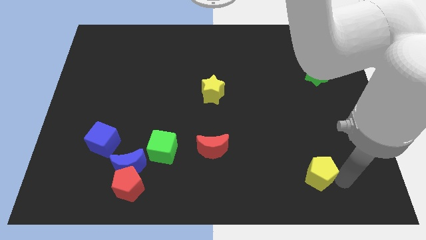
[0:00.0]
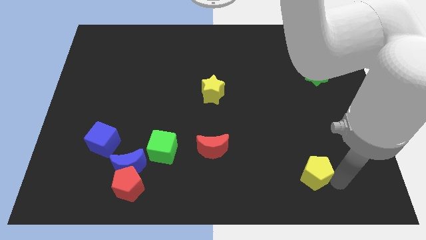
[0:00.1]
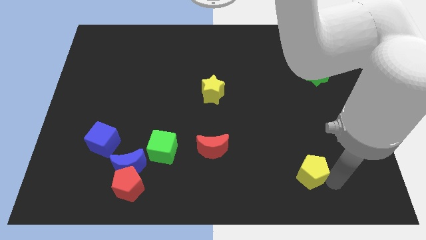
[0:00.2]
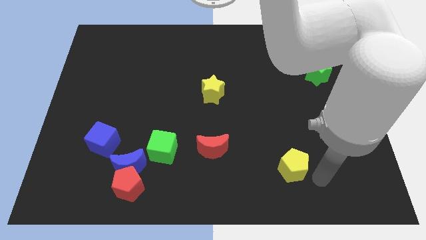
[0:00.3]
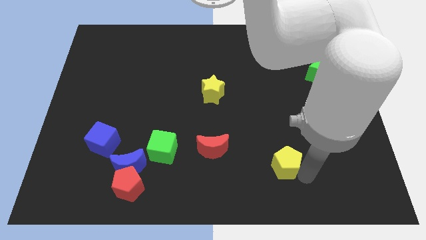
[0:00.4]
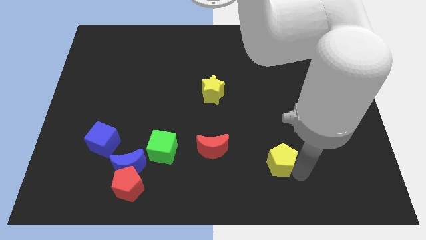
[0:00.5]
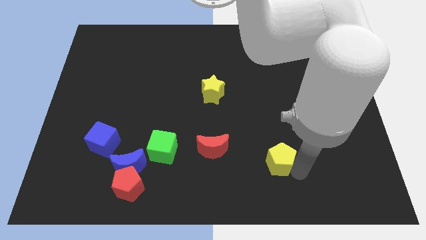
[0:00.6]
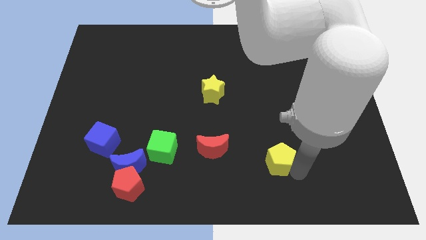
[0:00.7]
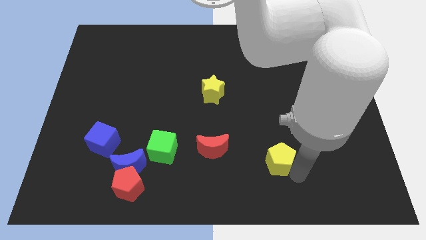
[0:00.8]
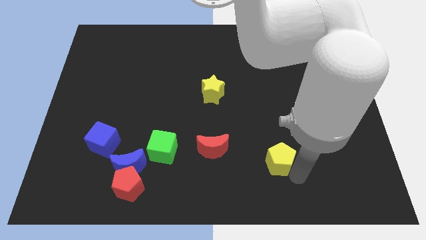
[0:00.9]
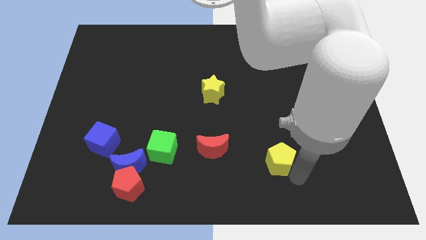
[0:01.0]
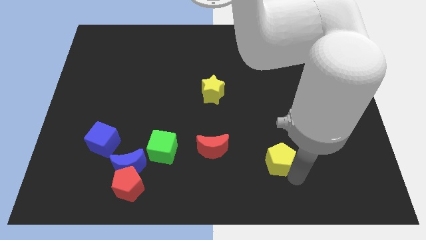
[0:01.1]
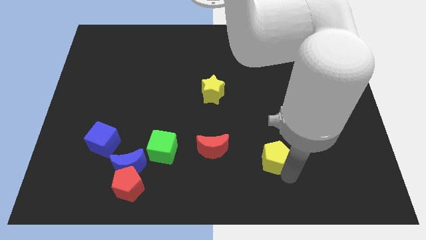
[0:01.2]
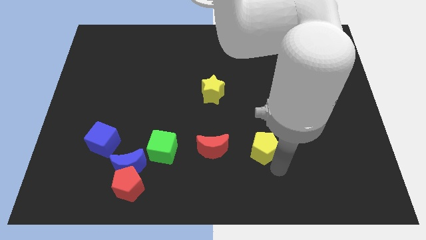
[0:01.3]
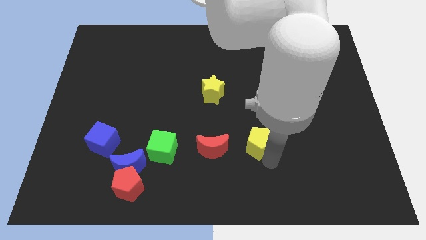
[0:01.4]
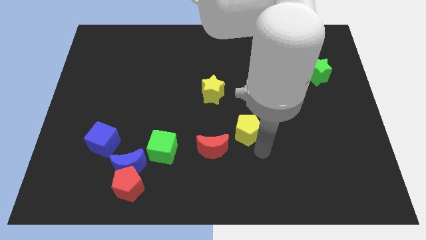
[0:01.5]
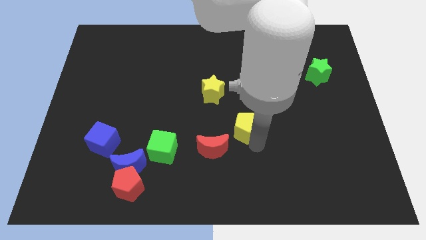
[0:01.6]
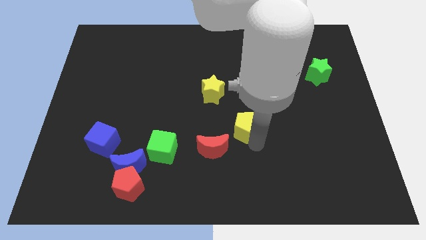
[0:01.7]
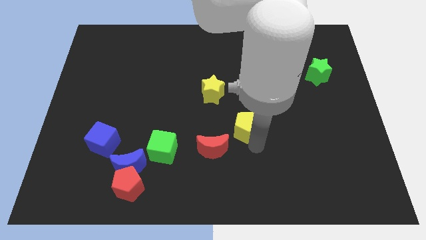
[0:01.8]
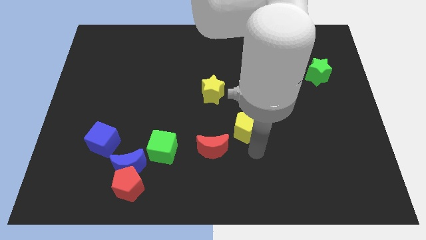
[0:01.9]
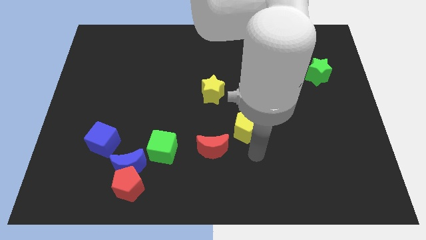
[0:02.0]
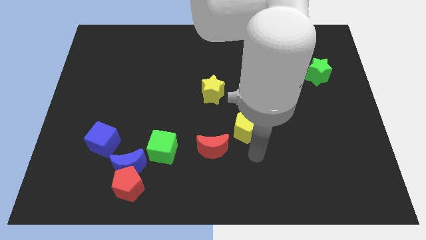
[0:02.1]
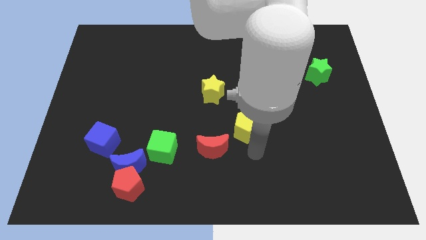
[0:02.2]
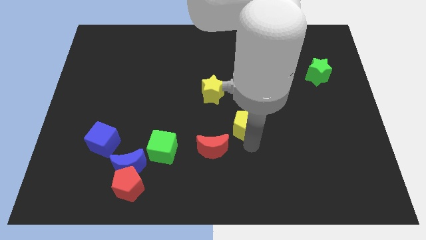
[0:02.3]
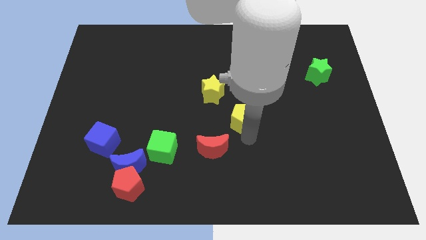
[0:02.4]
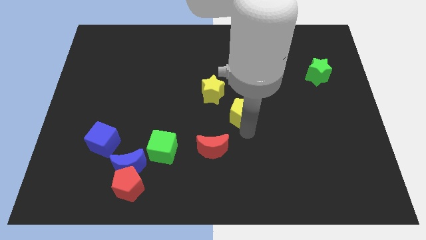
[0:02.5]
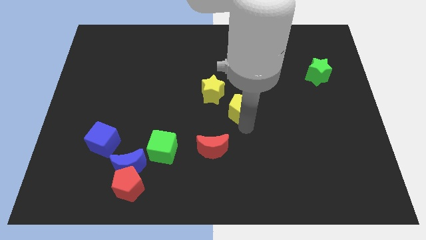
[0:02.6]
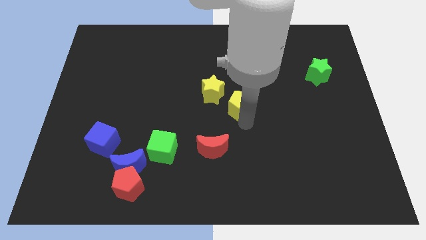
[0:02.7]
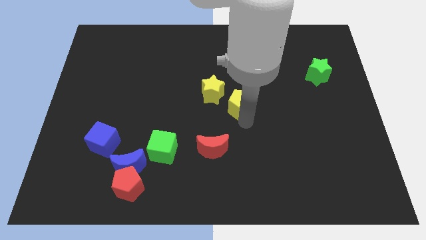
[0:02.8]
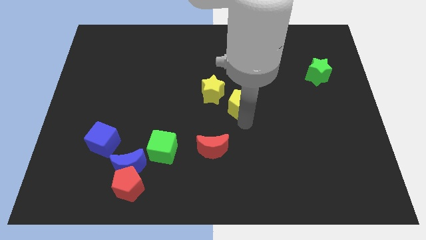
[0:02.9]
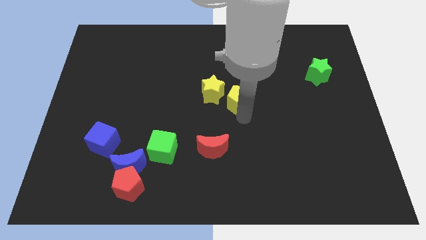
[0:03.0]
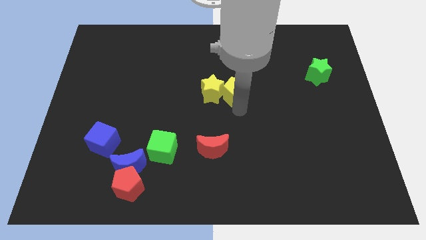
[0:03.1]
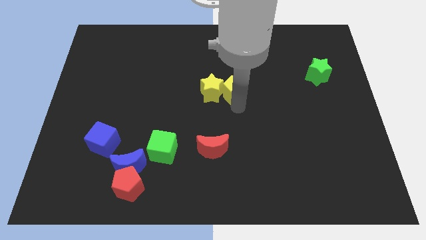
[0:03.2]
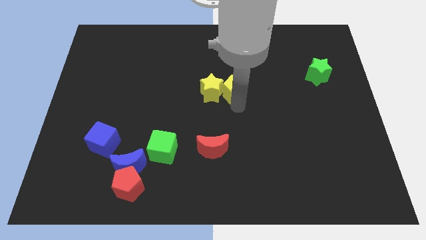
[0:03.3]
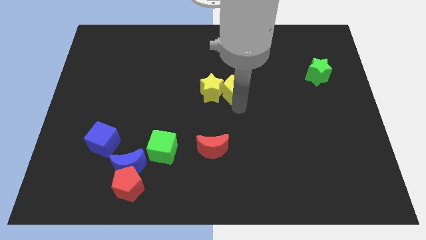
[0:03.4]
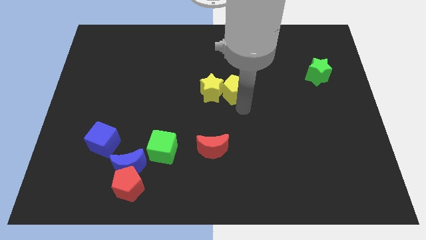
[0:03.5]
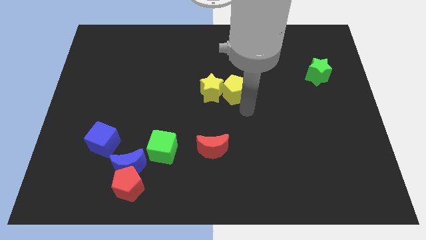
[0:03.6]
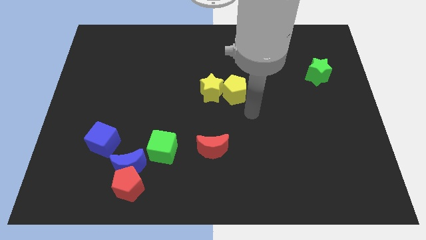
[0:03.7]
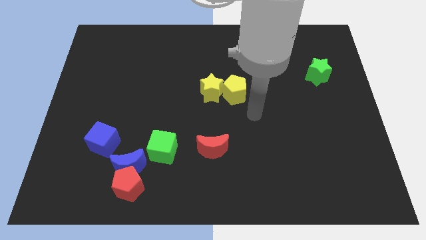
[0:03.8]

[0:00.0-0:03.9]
move the yellow pentagon to the right side of the yellow star

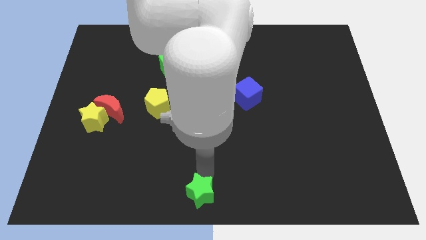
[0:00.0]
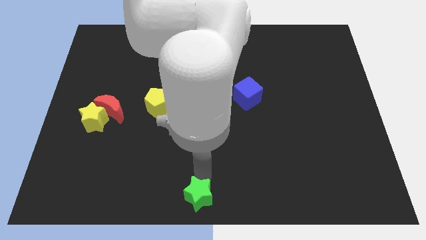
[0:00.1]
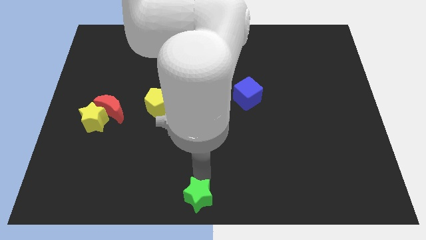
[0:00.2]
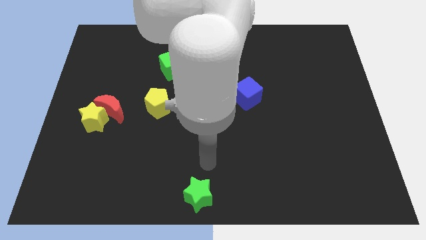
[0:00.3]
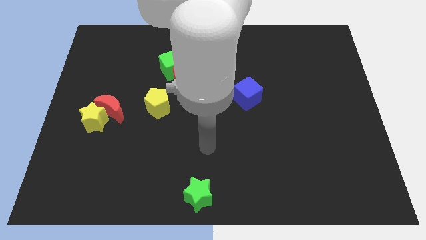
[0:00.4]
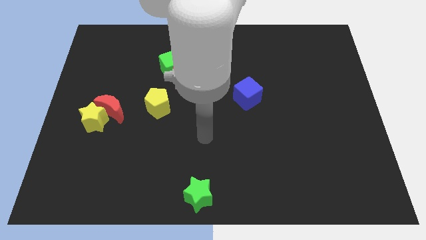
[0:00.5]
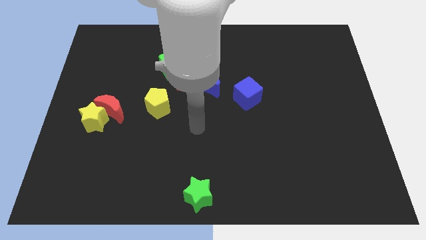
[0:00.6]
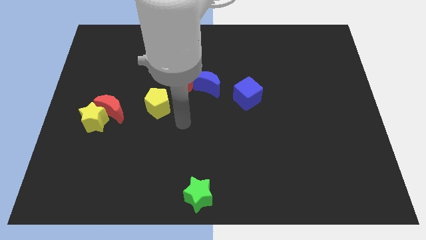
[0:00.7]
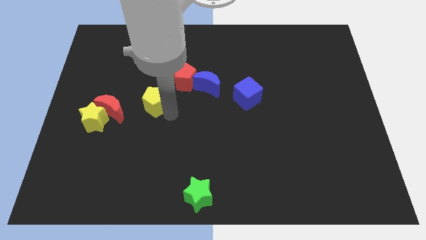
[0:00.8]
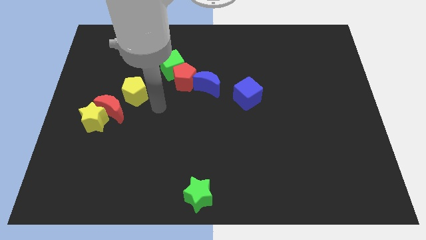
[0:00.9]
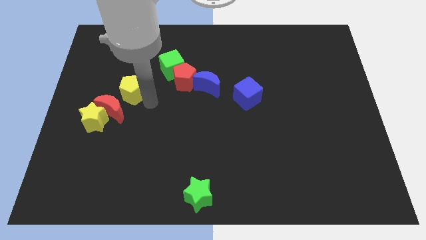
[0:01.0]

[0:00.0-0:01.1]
move yellow penatgon to the right of the red crescent

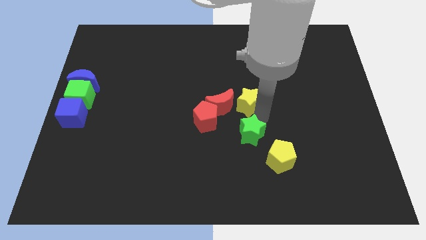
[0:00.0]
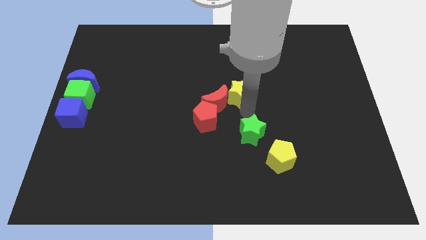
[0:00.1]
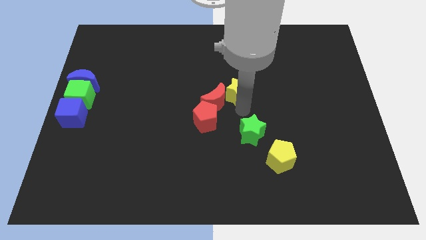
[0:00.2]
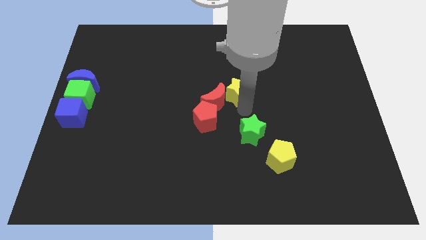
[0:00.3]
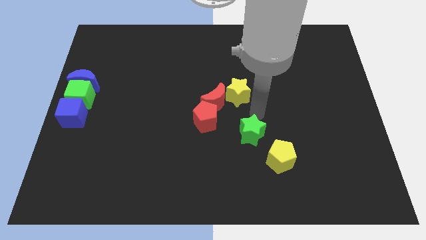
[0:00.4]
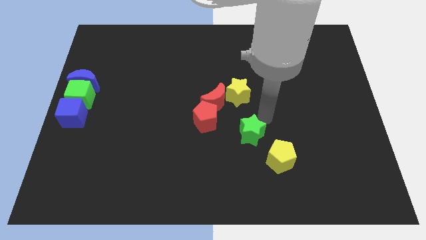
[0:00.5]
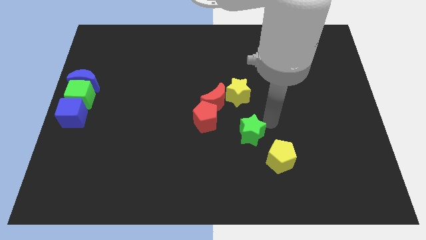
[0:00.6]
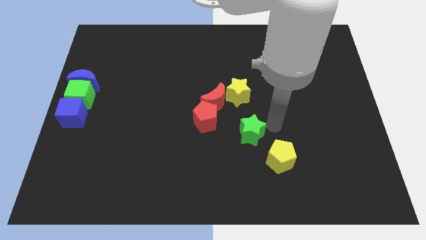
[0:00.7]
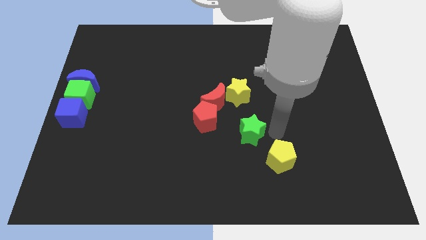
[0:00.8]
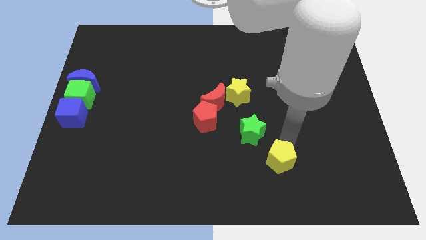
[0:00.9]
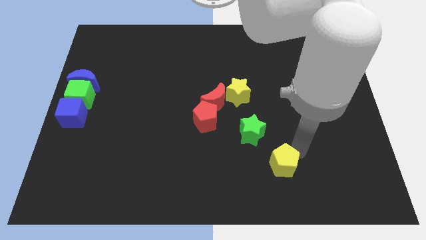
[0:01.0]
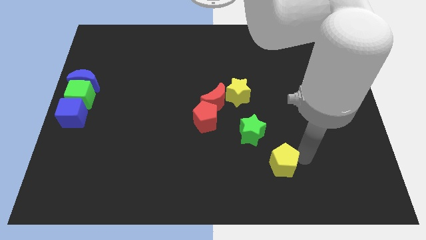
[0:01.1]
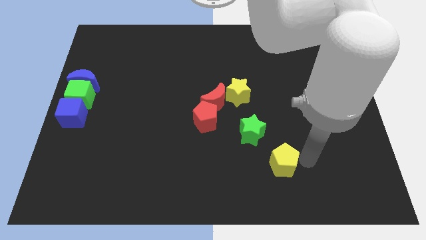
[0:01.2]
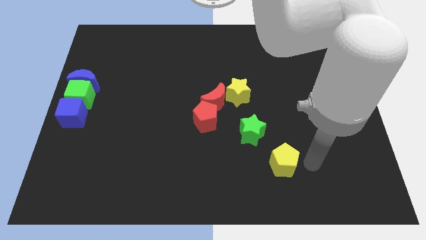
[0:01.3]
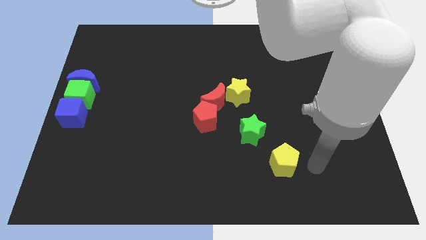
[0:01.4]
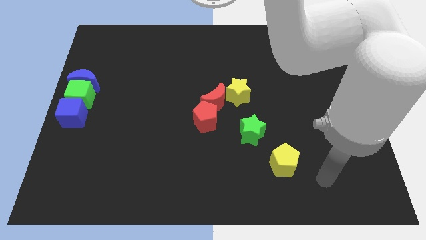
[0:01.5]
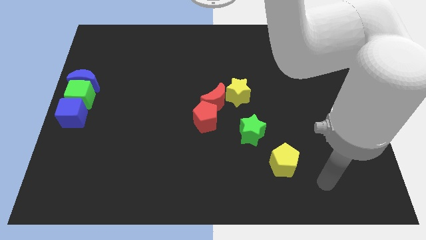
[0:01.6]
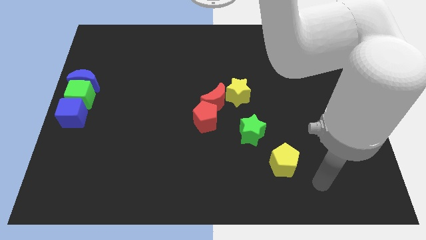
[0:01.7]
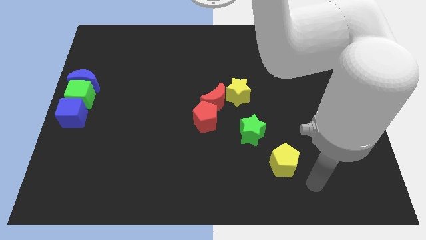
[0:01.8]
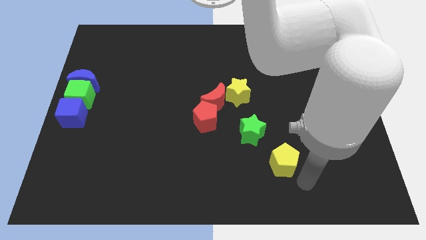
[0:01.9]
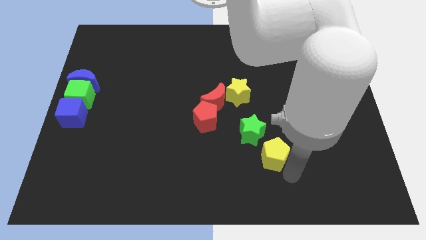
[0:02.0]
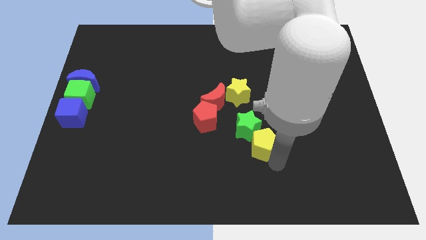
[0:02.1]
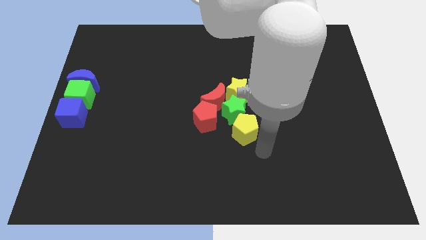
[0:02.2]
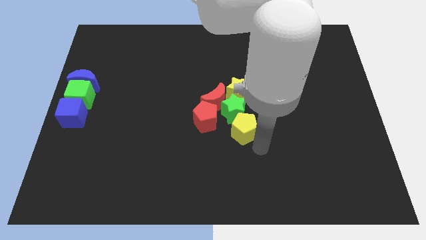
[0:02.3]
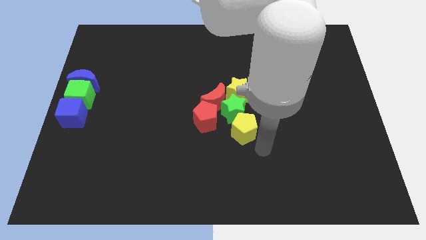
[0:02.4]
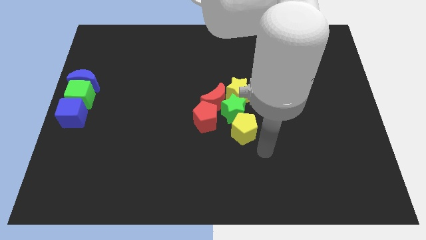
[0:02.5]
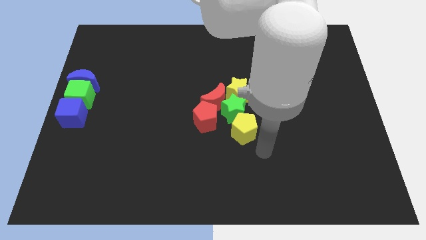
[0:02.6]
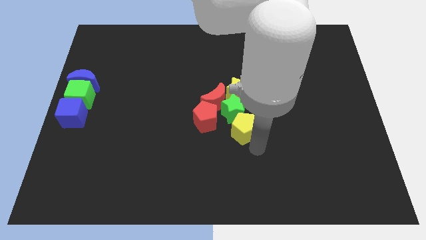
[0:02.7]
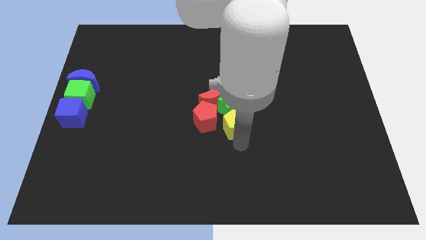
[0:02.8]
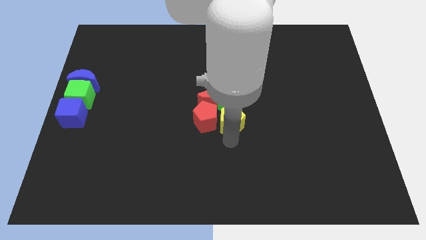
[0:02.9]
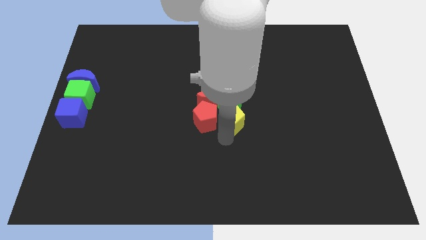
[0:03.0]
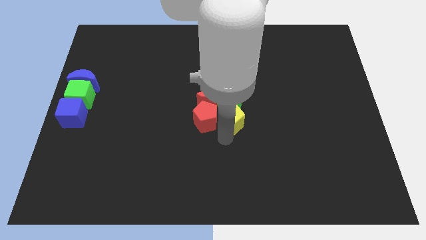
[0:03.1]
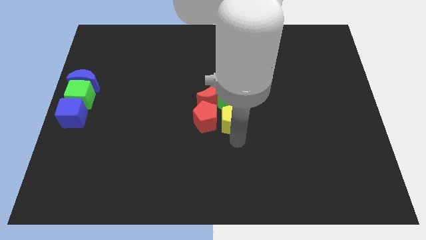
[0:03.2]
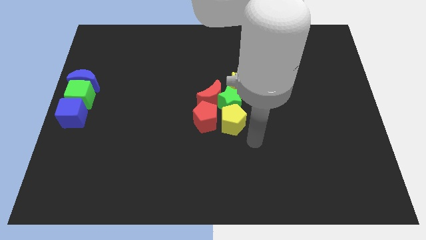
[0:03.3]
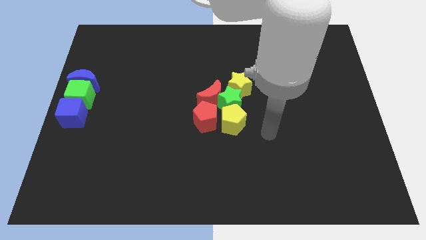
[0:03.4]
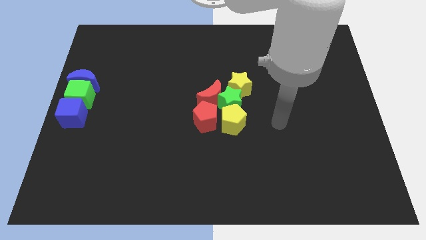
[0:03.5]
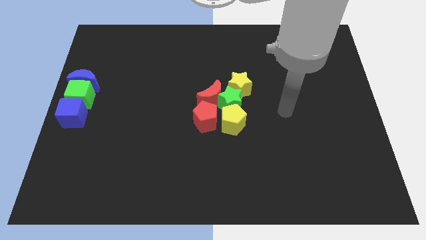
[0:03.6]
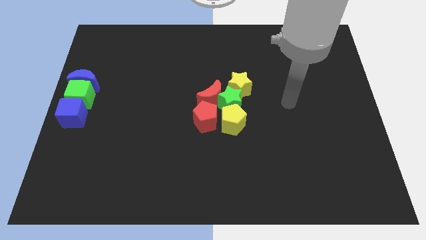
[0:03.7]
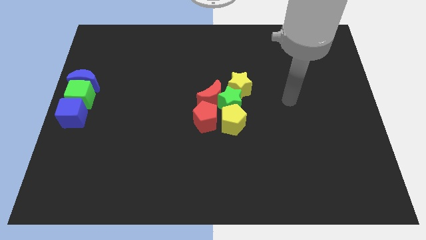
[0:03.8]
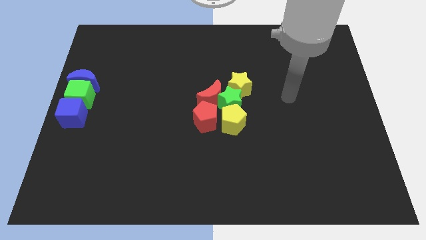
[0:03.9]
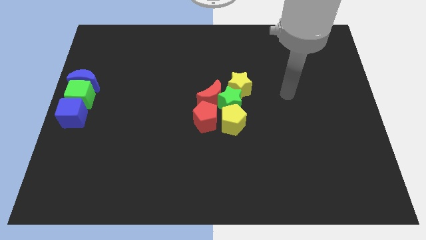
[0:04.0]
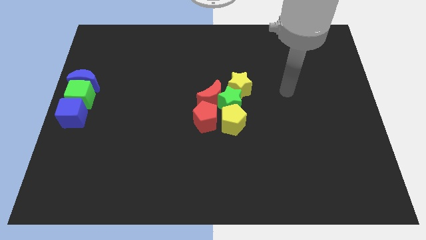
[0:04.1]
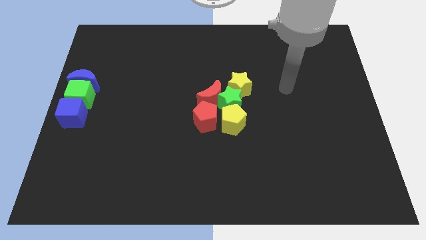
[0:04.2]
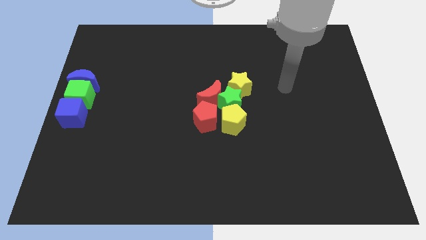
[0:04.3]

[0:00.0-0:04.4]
push yellow pentagon below green star
